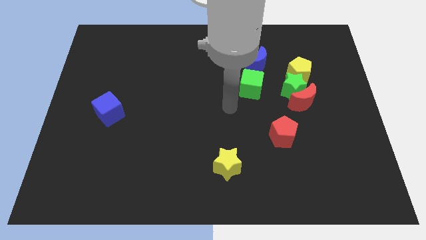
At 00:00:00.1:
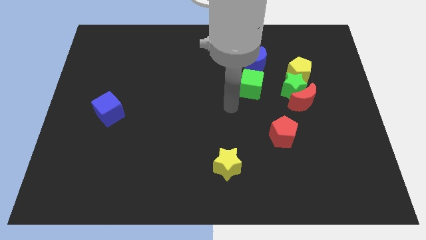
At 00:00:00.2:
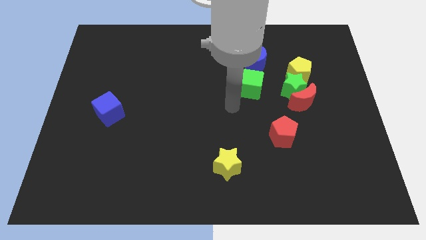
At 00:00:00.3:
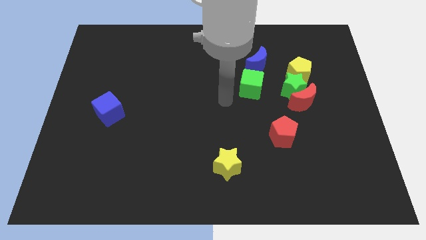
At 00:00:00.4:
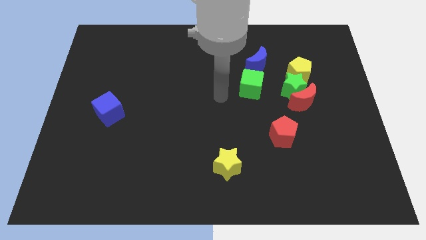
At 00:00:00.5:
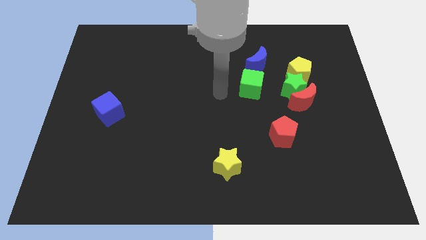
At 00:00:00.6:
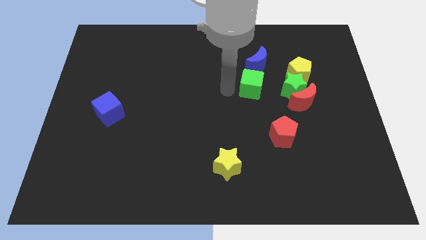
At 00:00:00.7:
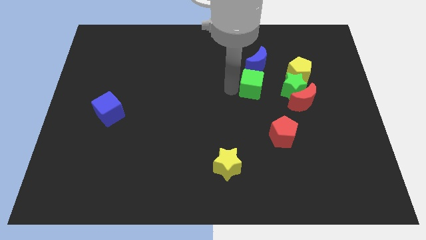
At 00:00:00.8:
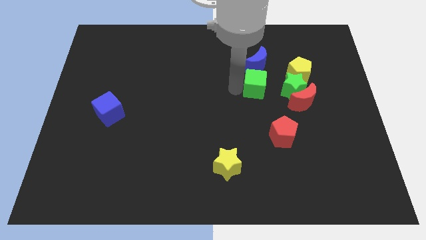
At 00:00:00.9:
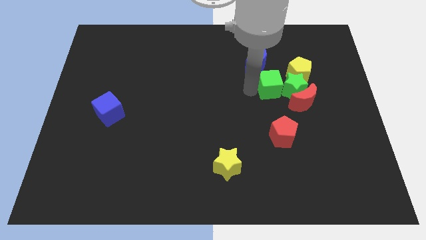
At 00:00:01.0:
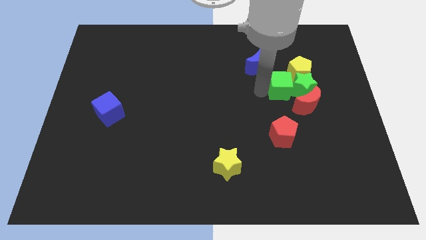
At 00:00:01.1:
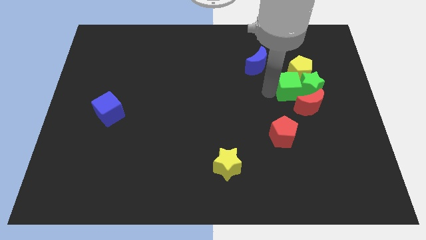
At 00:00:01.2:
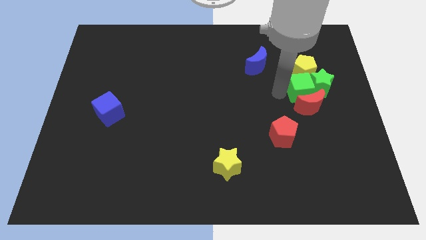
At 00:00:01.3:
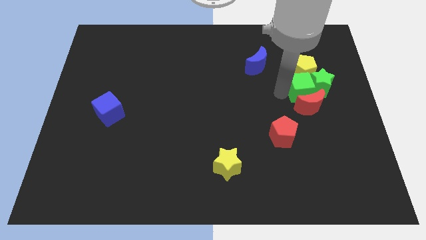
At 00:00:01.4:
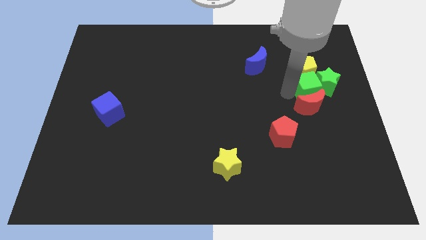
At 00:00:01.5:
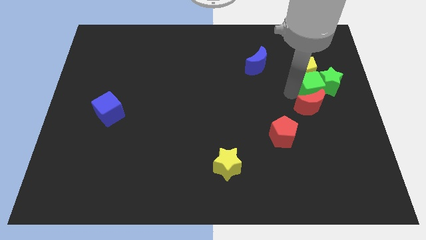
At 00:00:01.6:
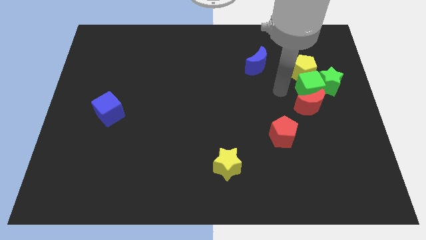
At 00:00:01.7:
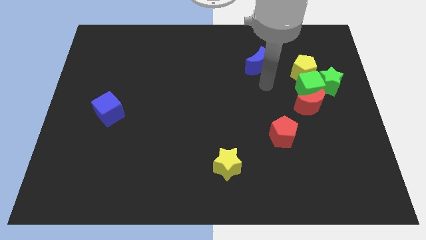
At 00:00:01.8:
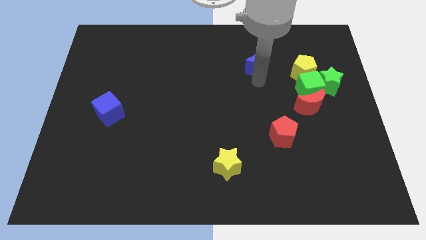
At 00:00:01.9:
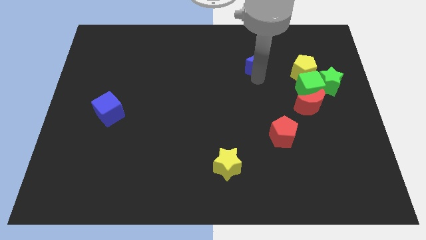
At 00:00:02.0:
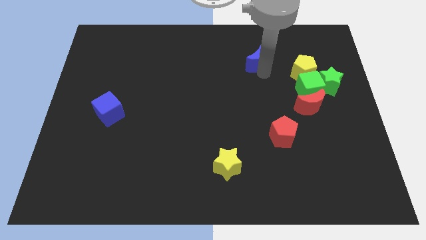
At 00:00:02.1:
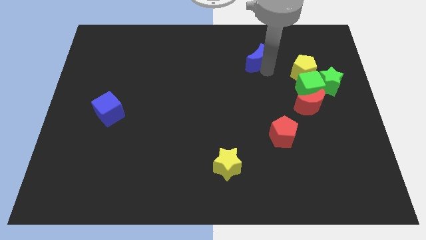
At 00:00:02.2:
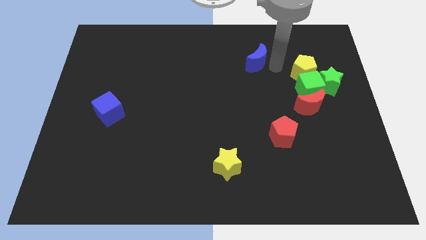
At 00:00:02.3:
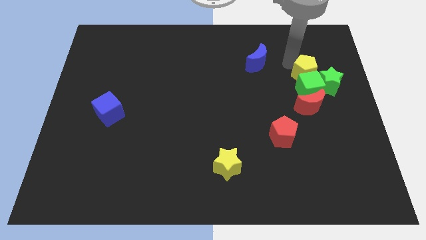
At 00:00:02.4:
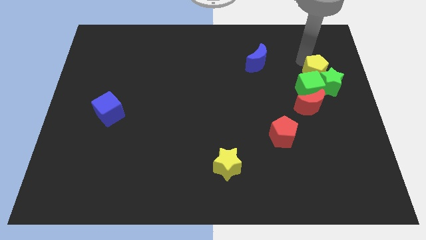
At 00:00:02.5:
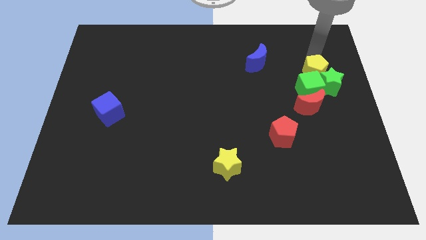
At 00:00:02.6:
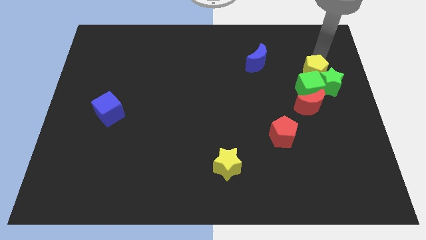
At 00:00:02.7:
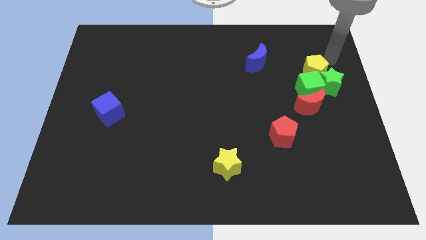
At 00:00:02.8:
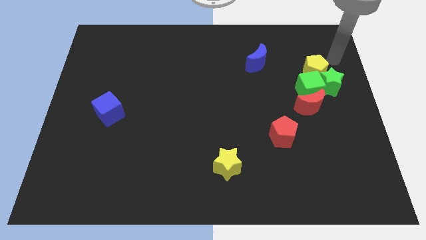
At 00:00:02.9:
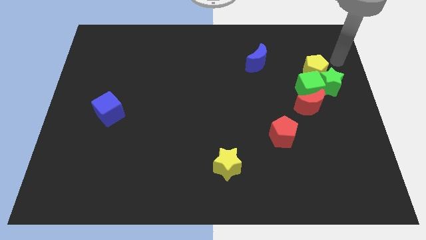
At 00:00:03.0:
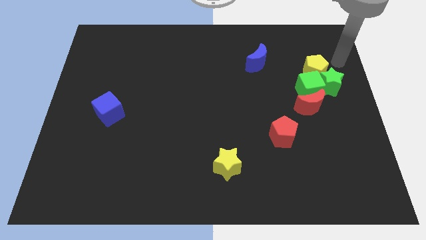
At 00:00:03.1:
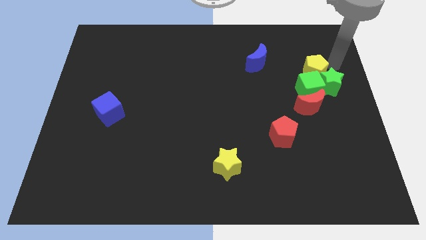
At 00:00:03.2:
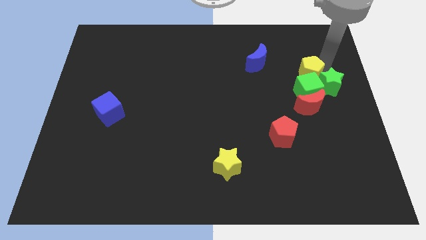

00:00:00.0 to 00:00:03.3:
make a triangle out of green blocks and the yellow pentagon

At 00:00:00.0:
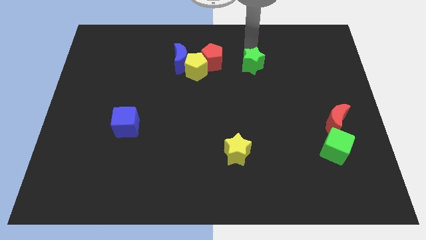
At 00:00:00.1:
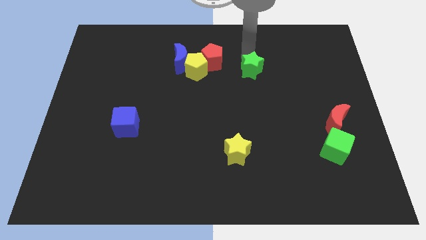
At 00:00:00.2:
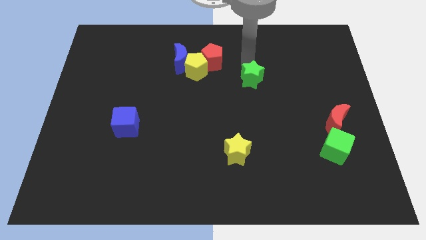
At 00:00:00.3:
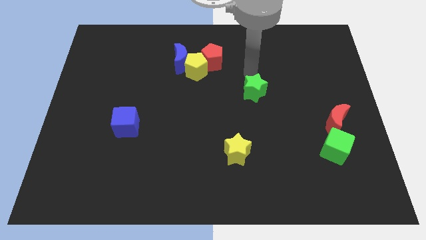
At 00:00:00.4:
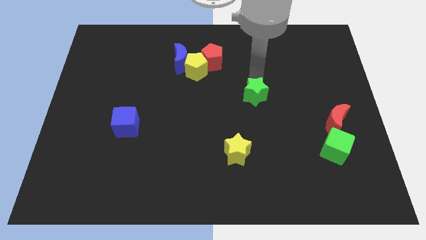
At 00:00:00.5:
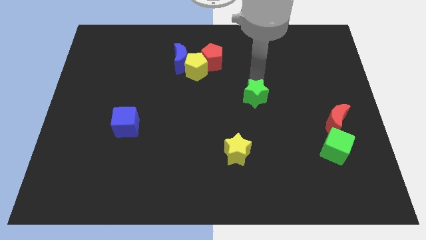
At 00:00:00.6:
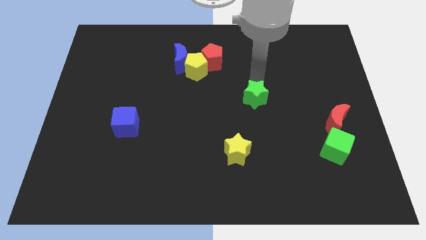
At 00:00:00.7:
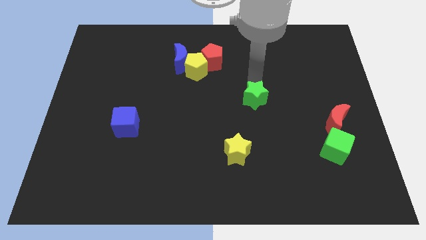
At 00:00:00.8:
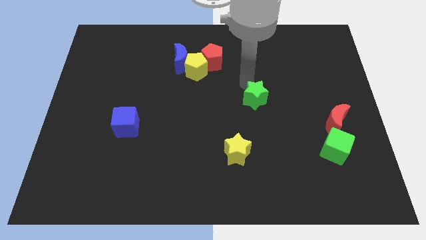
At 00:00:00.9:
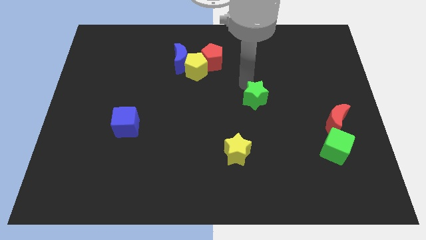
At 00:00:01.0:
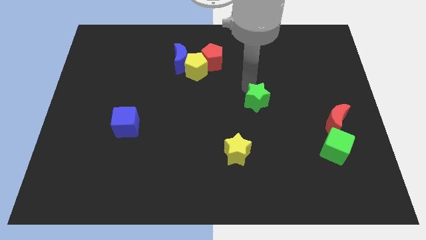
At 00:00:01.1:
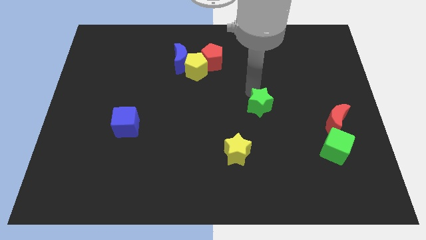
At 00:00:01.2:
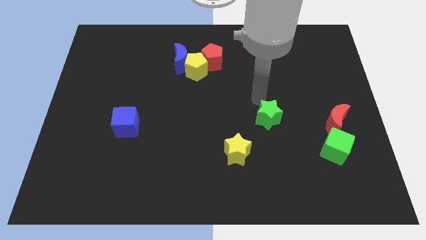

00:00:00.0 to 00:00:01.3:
move the green star to the top right of the yellow star

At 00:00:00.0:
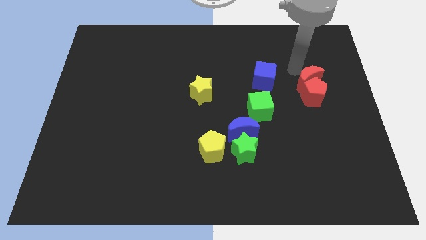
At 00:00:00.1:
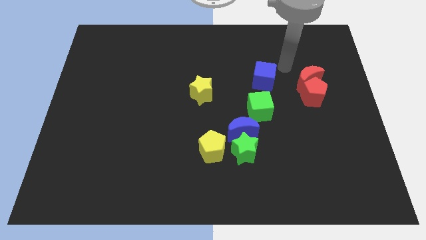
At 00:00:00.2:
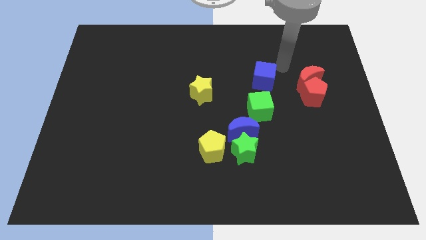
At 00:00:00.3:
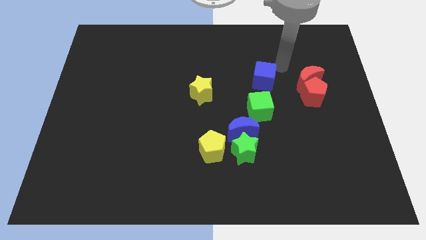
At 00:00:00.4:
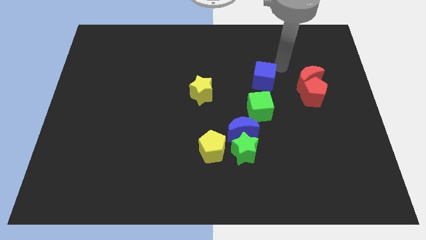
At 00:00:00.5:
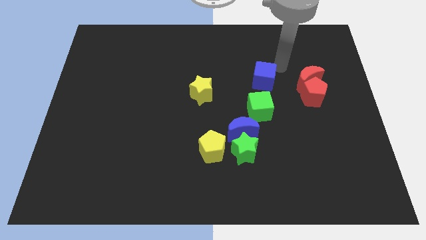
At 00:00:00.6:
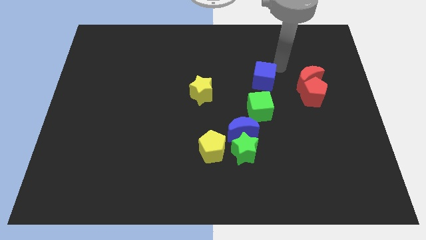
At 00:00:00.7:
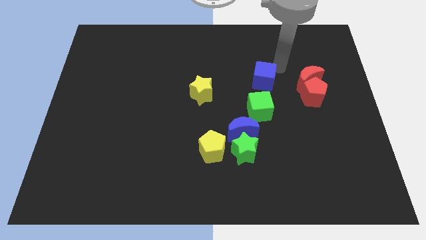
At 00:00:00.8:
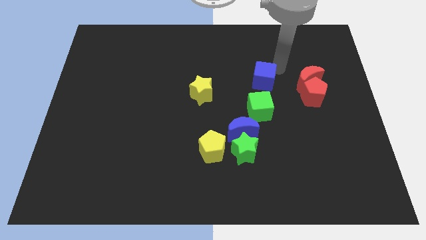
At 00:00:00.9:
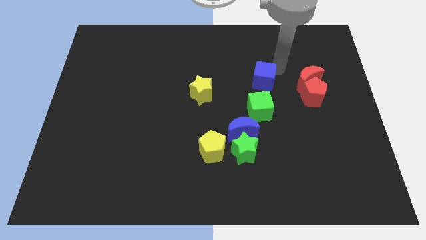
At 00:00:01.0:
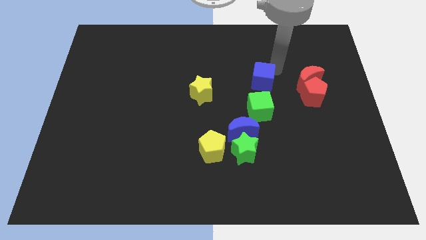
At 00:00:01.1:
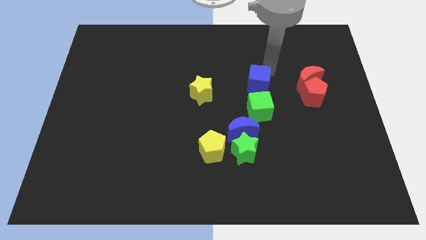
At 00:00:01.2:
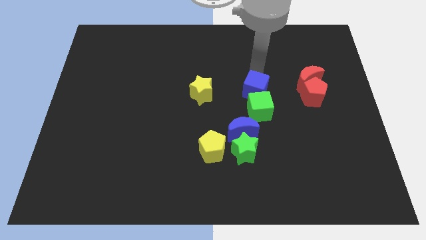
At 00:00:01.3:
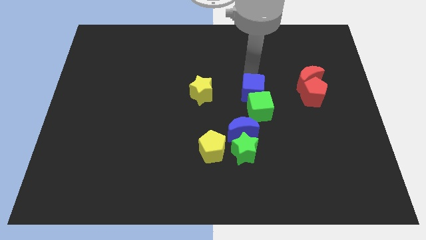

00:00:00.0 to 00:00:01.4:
push the blue cube slightly to the bottom

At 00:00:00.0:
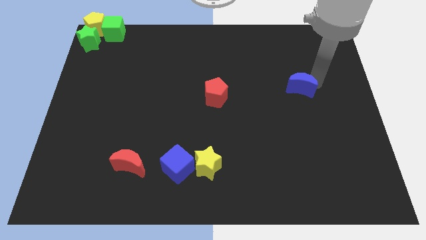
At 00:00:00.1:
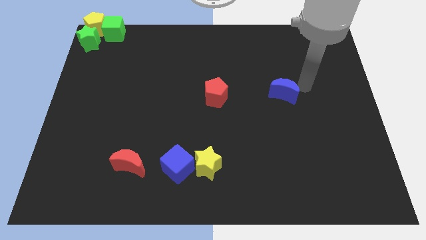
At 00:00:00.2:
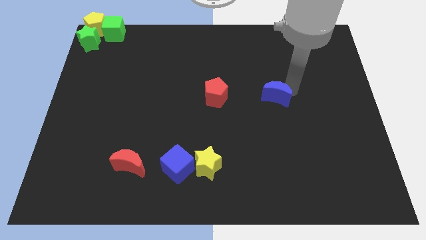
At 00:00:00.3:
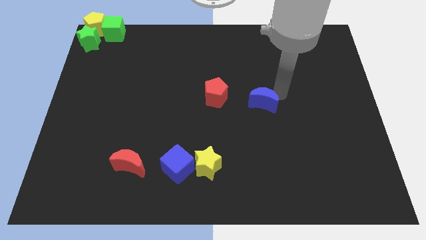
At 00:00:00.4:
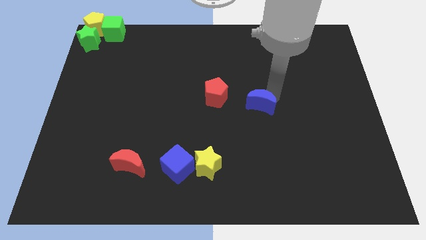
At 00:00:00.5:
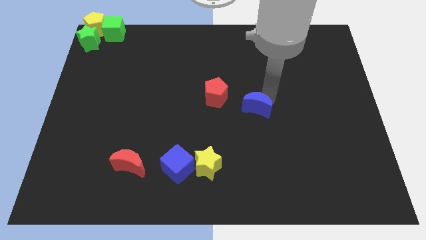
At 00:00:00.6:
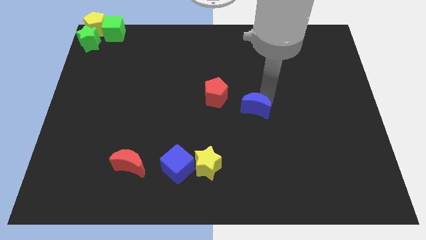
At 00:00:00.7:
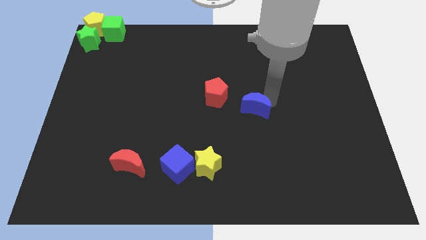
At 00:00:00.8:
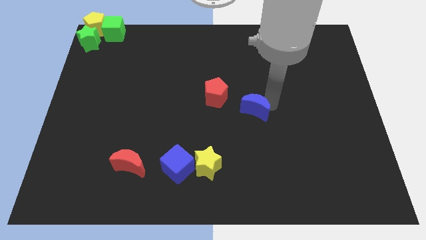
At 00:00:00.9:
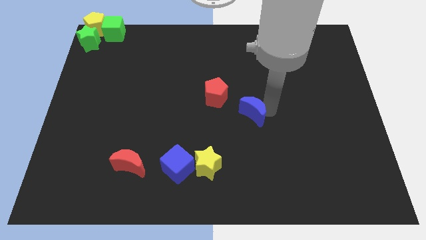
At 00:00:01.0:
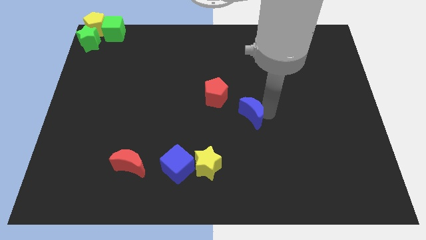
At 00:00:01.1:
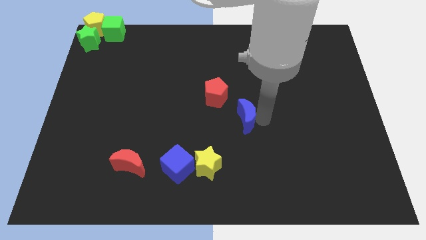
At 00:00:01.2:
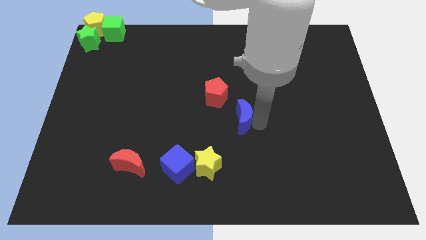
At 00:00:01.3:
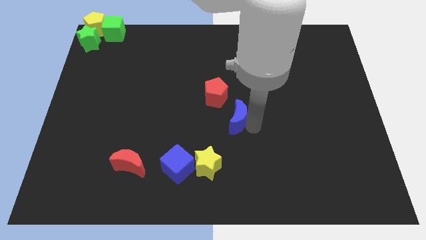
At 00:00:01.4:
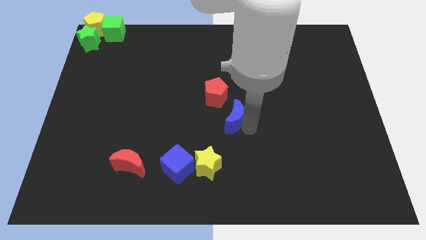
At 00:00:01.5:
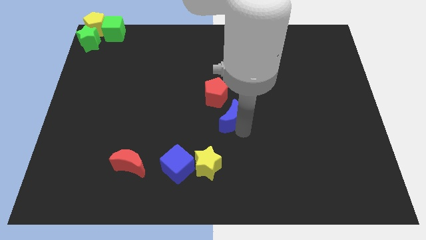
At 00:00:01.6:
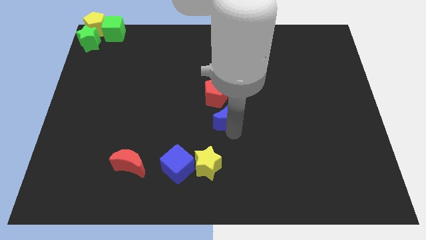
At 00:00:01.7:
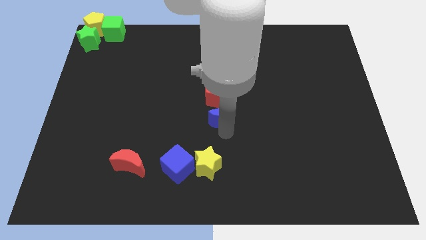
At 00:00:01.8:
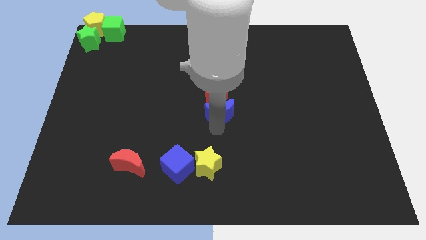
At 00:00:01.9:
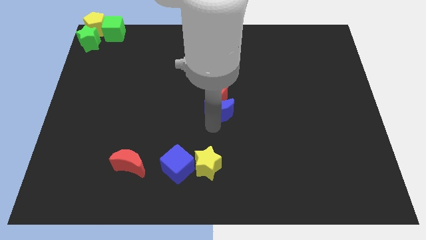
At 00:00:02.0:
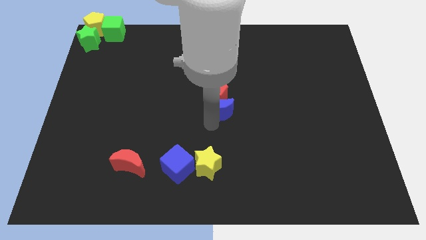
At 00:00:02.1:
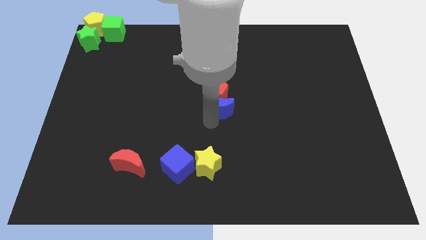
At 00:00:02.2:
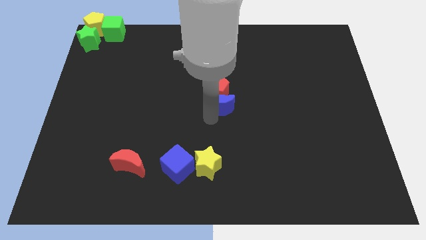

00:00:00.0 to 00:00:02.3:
move the blue moon below into the red pentagon

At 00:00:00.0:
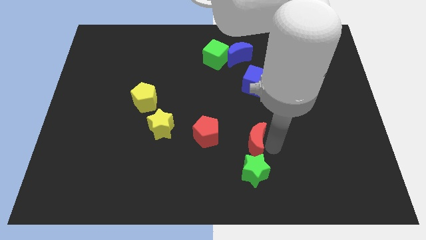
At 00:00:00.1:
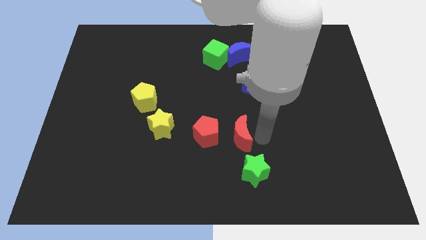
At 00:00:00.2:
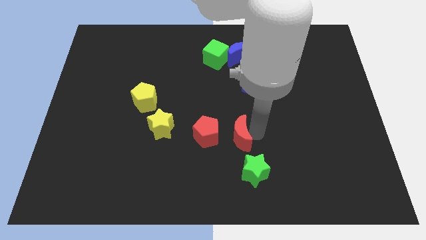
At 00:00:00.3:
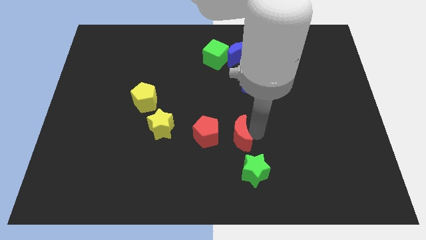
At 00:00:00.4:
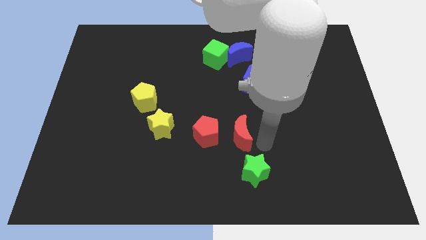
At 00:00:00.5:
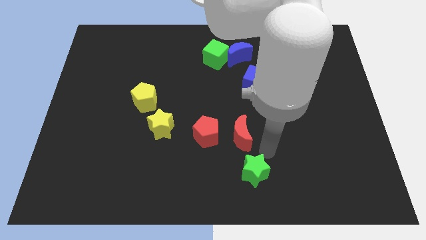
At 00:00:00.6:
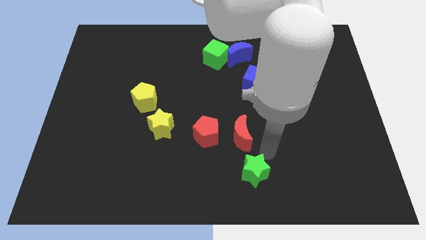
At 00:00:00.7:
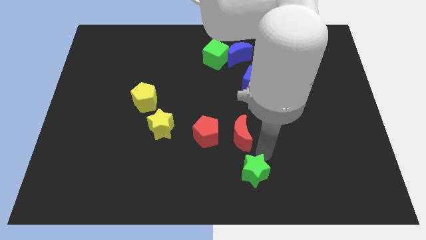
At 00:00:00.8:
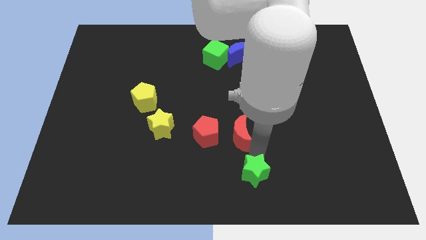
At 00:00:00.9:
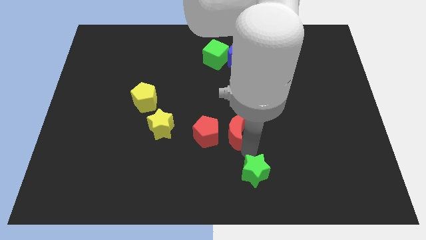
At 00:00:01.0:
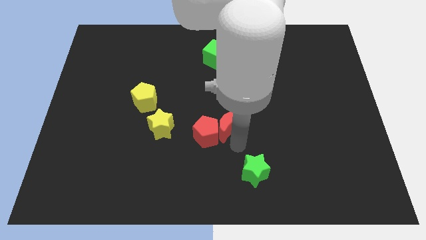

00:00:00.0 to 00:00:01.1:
slightly move the red moon to the right of the red pentagon
